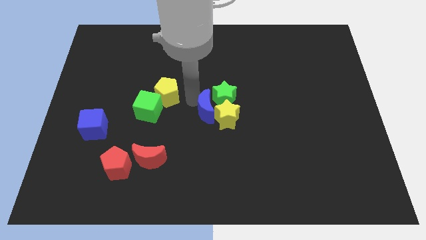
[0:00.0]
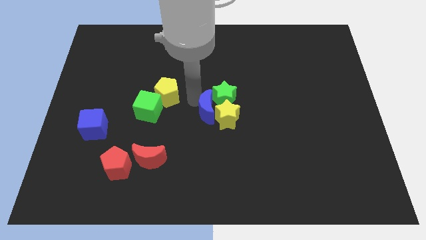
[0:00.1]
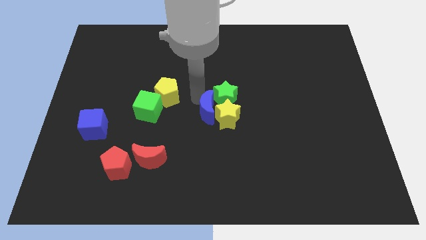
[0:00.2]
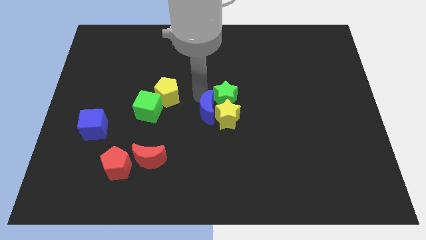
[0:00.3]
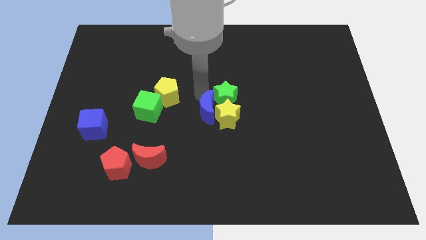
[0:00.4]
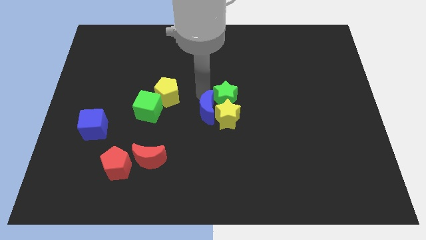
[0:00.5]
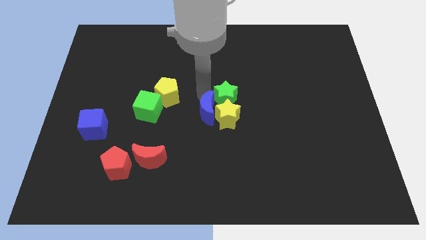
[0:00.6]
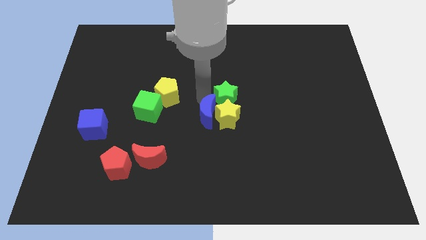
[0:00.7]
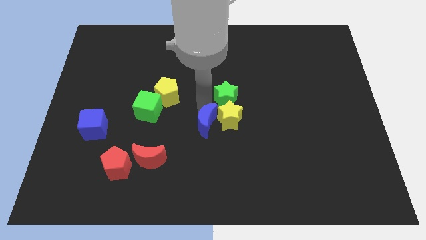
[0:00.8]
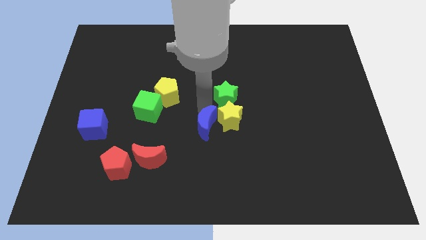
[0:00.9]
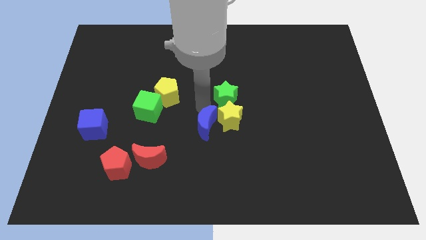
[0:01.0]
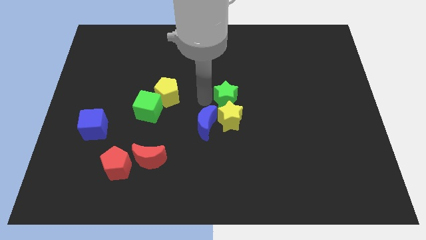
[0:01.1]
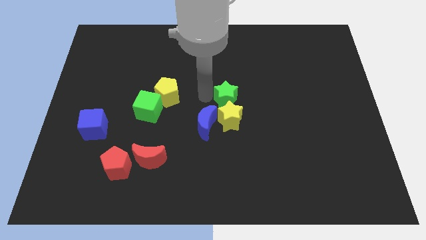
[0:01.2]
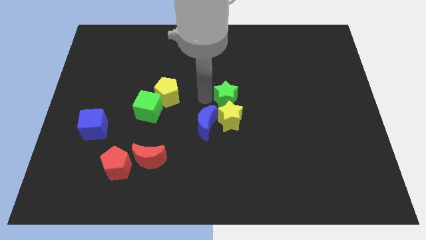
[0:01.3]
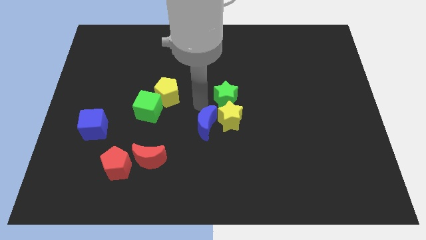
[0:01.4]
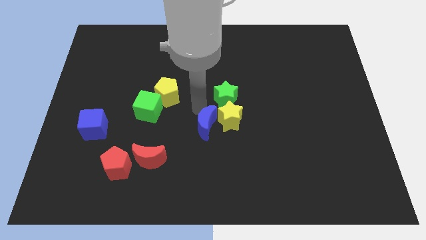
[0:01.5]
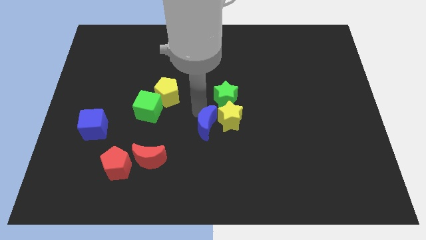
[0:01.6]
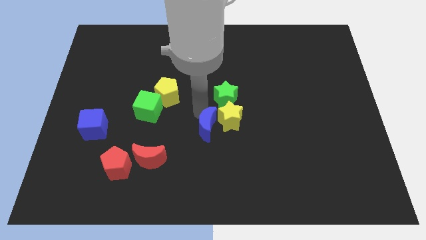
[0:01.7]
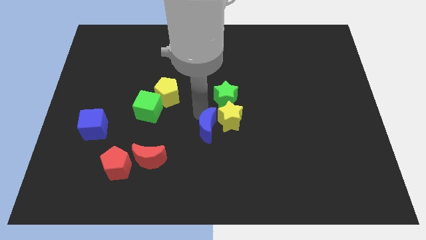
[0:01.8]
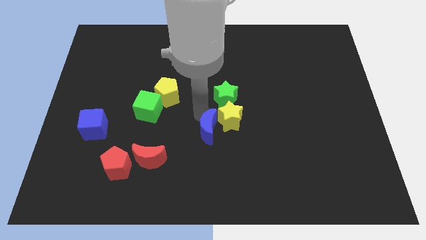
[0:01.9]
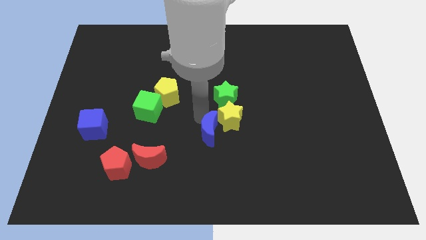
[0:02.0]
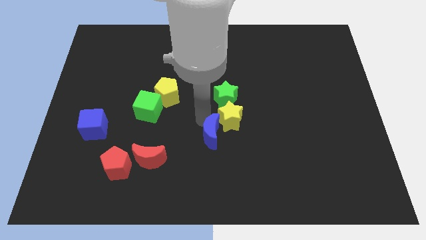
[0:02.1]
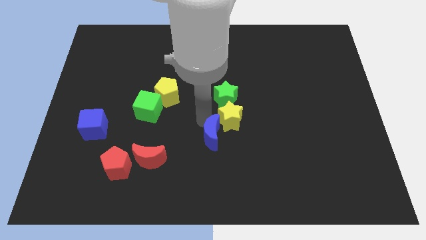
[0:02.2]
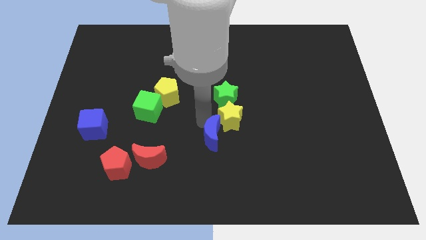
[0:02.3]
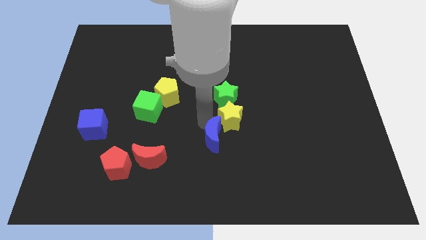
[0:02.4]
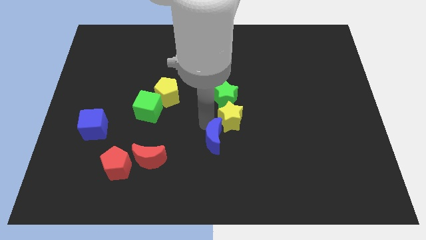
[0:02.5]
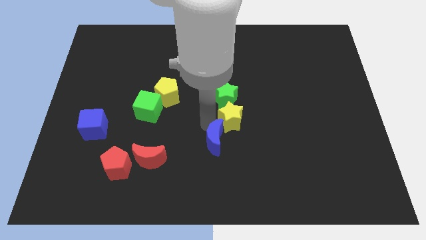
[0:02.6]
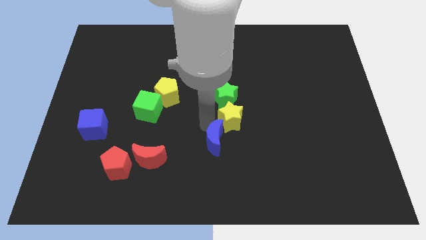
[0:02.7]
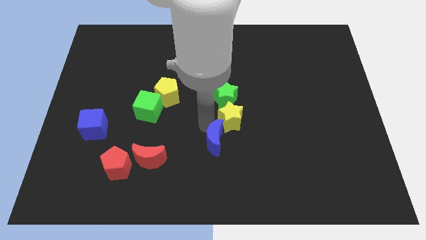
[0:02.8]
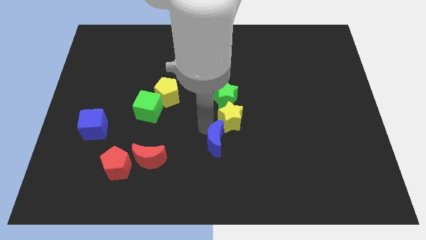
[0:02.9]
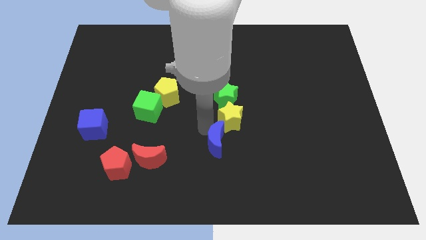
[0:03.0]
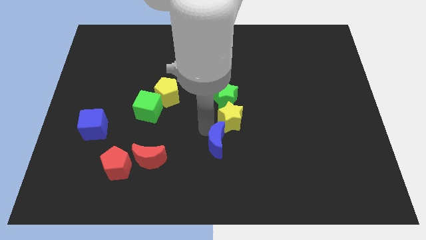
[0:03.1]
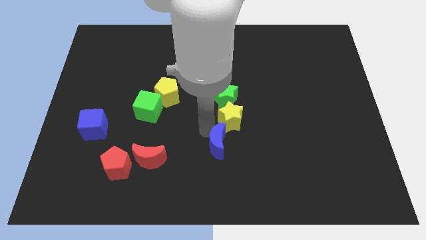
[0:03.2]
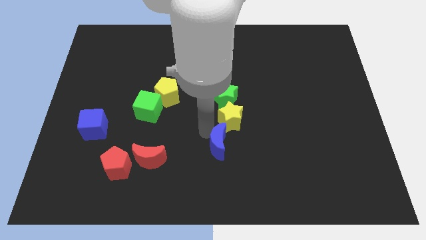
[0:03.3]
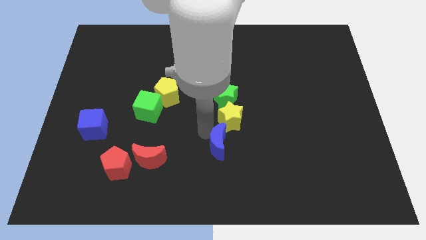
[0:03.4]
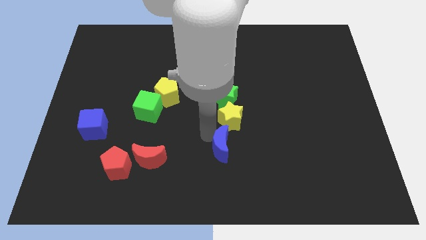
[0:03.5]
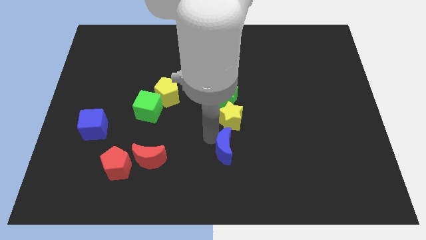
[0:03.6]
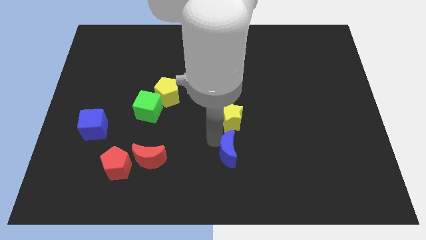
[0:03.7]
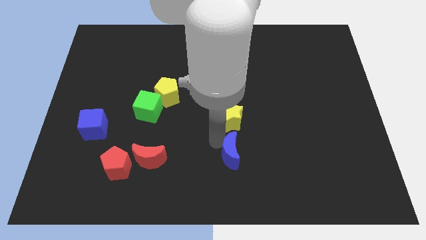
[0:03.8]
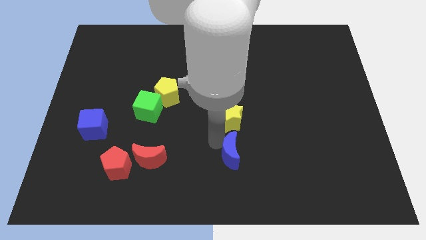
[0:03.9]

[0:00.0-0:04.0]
place the blue moon below the yellow star

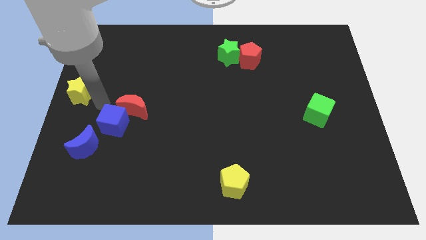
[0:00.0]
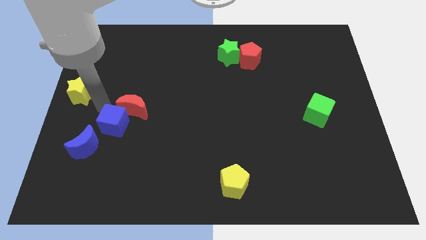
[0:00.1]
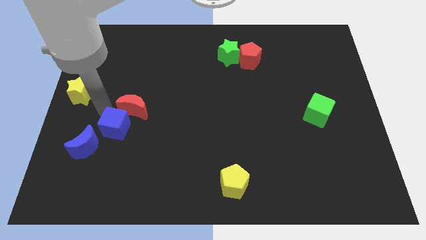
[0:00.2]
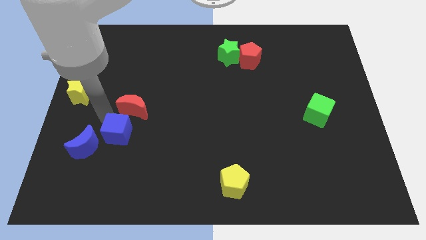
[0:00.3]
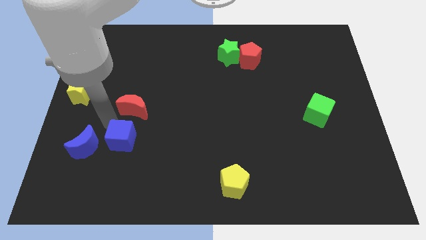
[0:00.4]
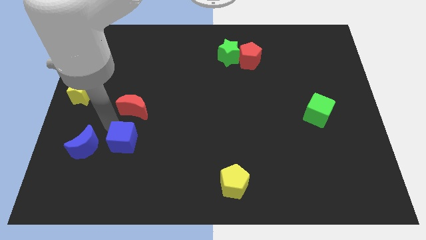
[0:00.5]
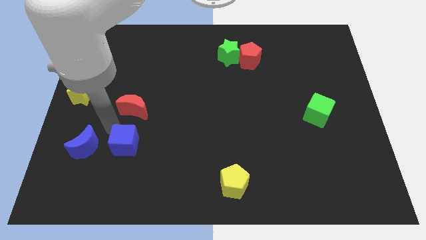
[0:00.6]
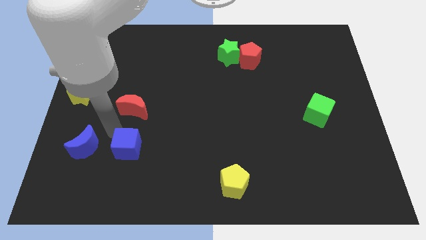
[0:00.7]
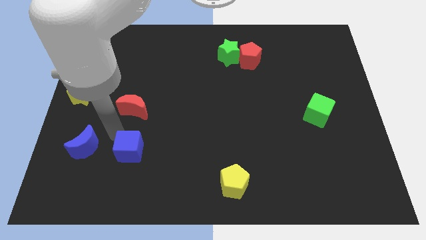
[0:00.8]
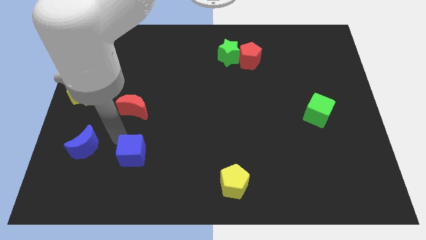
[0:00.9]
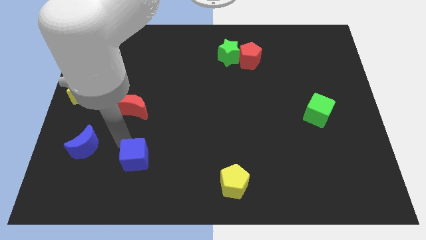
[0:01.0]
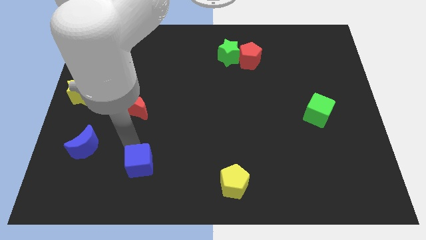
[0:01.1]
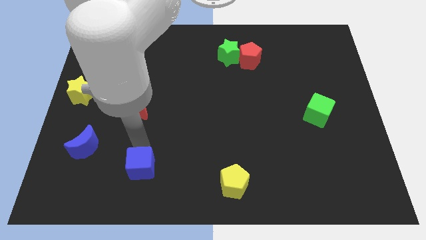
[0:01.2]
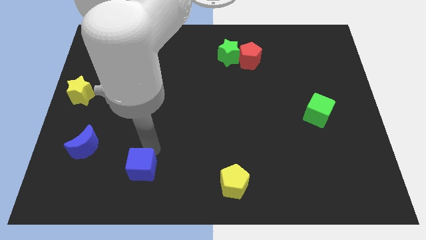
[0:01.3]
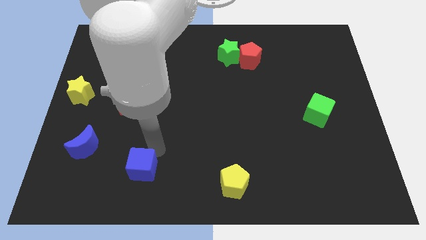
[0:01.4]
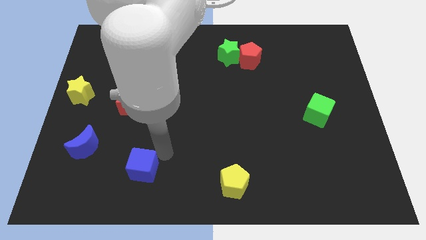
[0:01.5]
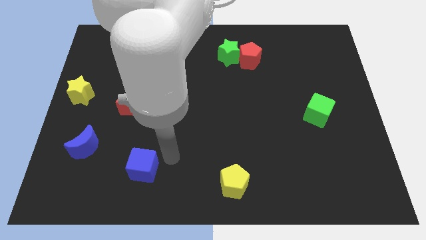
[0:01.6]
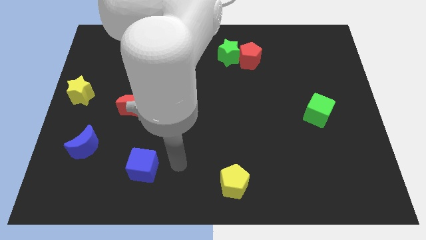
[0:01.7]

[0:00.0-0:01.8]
separate the blue cube from the red moon

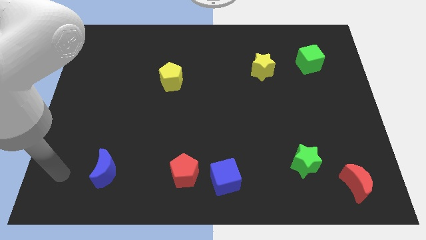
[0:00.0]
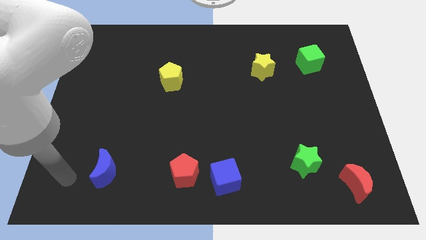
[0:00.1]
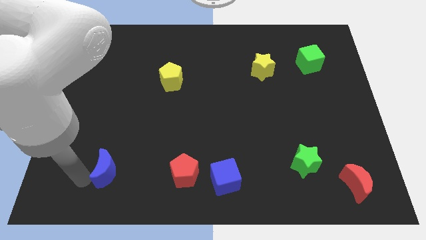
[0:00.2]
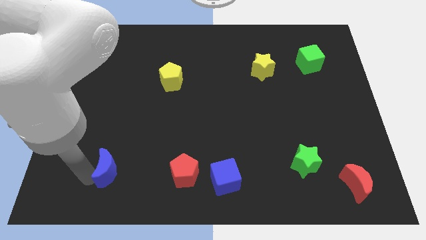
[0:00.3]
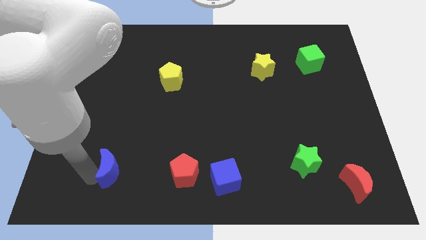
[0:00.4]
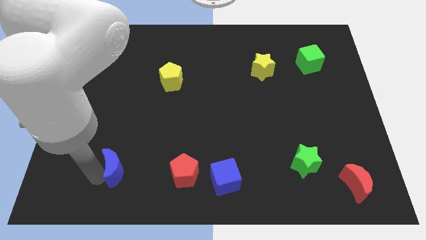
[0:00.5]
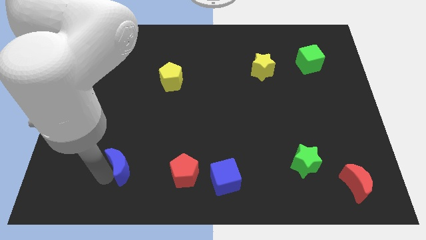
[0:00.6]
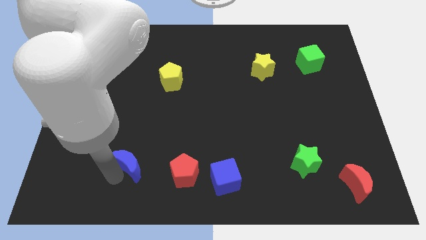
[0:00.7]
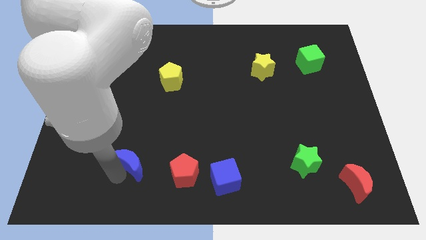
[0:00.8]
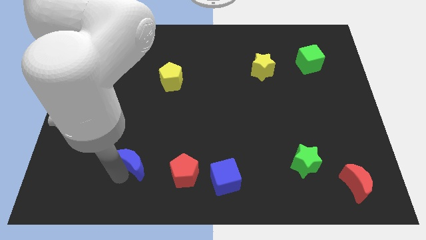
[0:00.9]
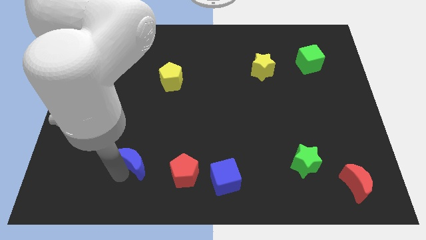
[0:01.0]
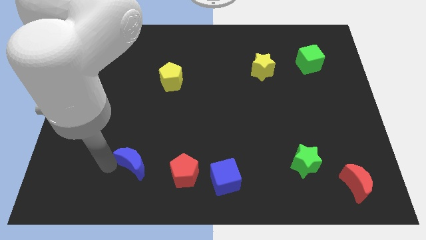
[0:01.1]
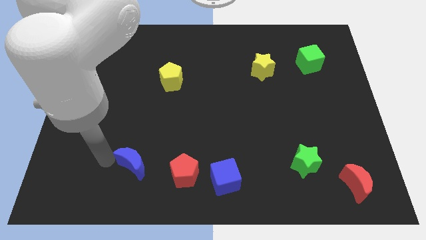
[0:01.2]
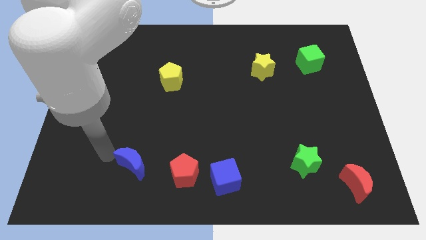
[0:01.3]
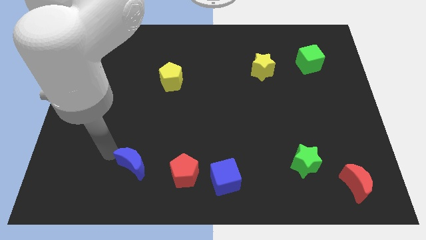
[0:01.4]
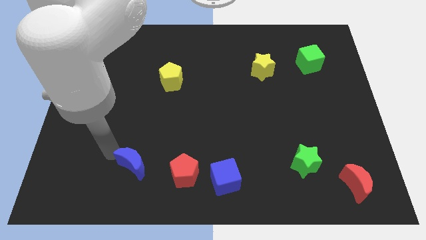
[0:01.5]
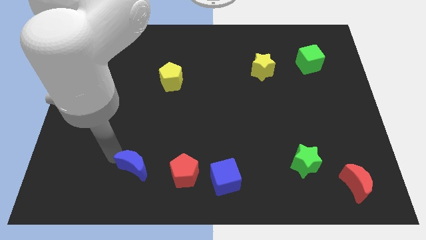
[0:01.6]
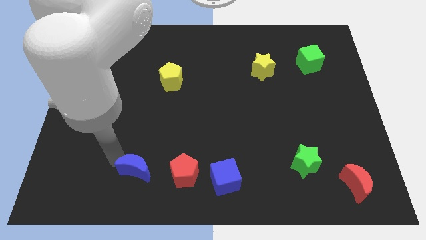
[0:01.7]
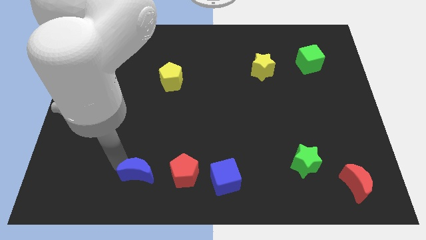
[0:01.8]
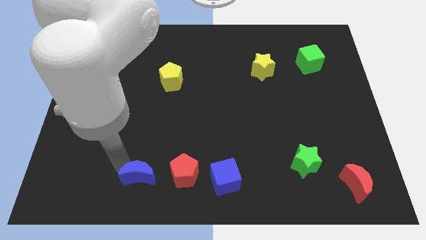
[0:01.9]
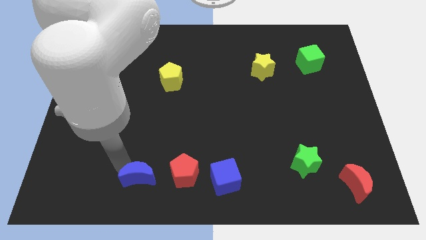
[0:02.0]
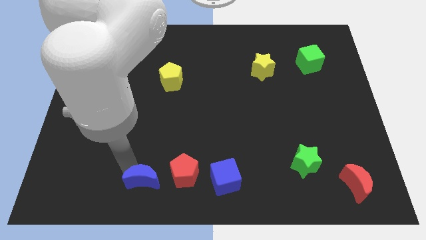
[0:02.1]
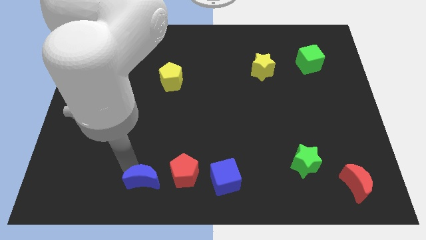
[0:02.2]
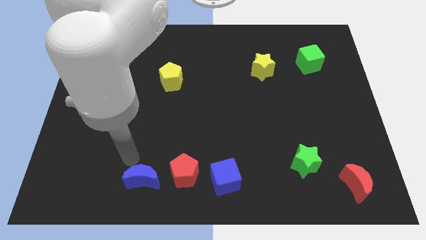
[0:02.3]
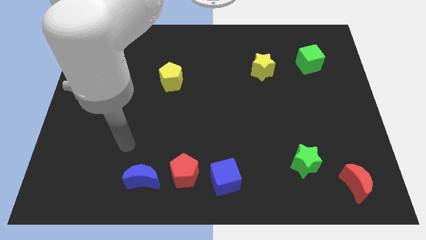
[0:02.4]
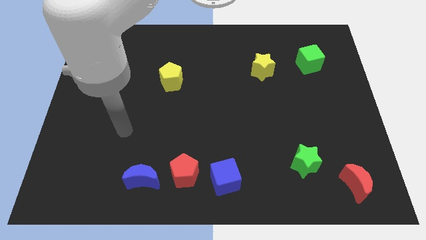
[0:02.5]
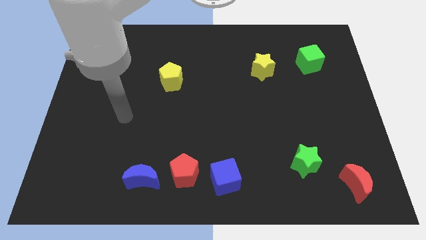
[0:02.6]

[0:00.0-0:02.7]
push the blue moon to the left side of the red pentagon

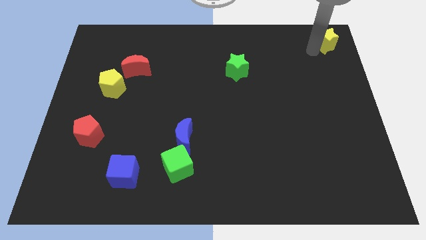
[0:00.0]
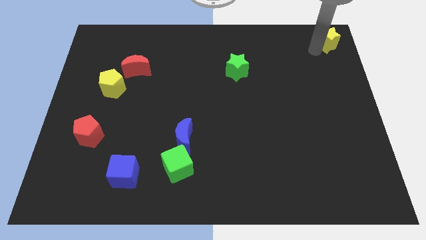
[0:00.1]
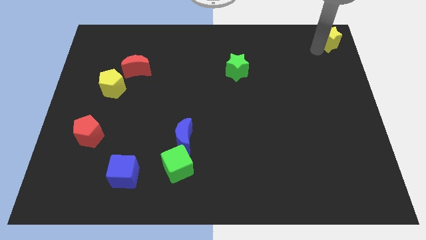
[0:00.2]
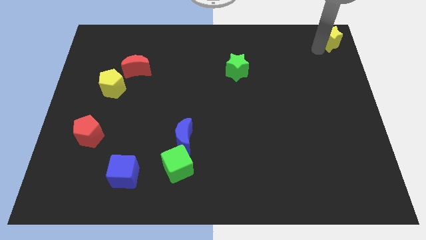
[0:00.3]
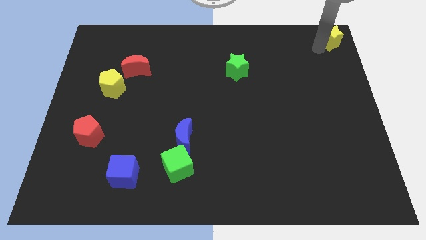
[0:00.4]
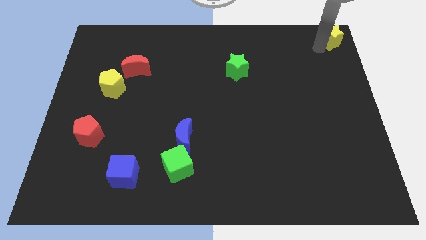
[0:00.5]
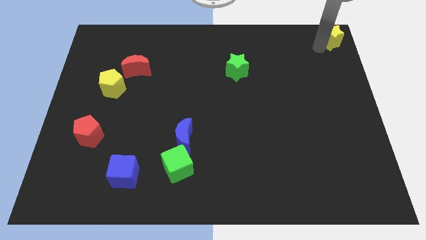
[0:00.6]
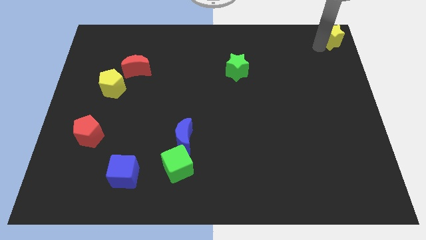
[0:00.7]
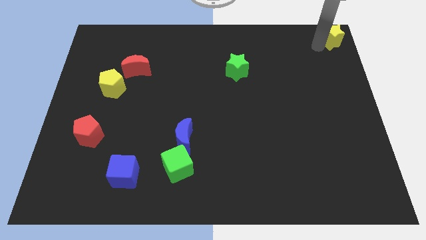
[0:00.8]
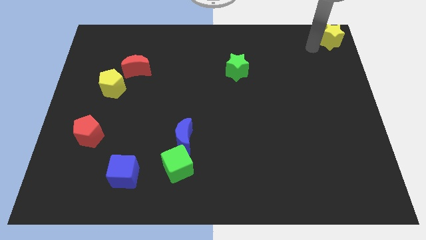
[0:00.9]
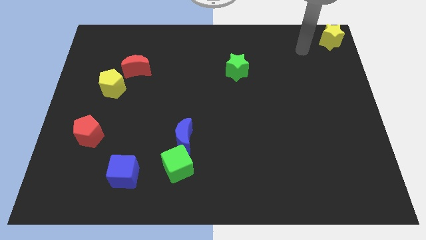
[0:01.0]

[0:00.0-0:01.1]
move yellow star to the top right corner of the board
